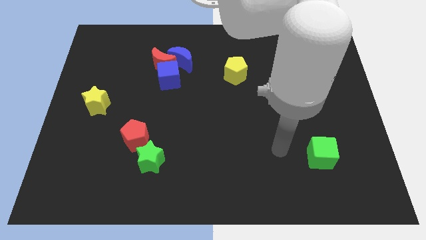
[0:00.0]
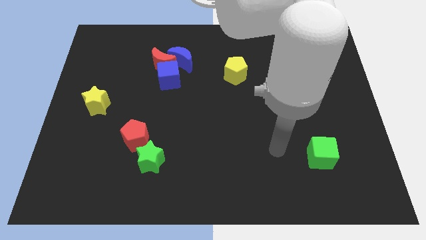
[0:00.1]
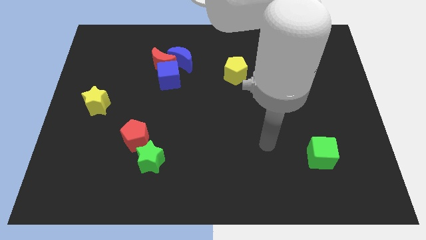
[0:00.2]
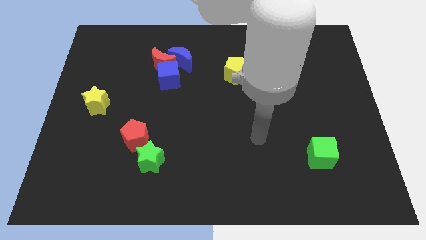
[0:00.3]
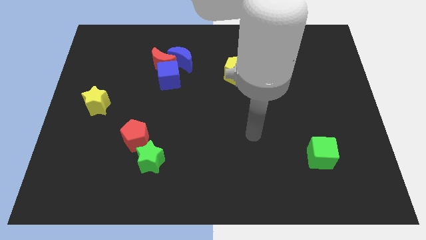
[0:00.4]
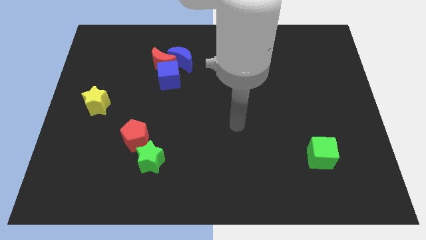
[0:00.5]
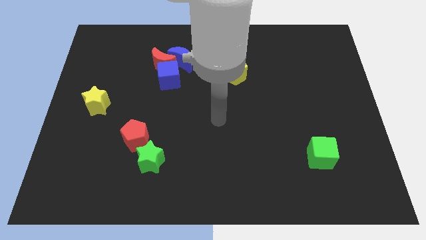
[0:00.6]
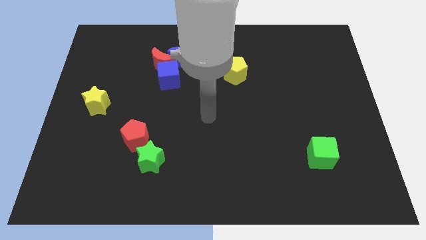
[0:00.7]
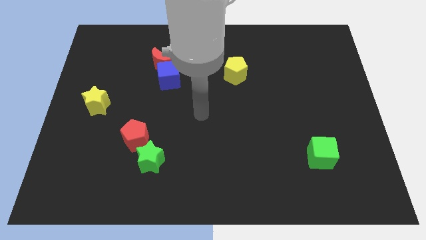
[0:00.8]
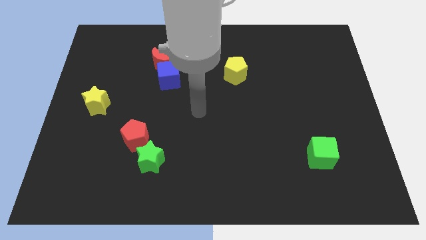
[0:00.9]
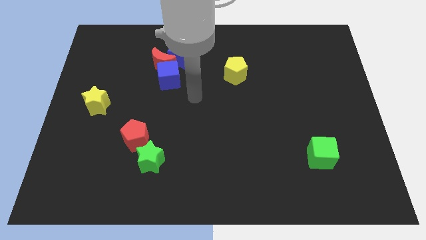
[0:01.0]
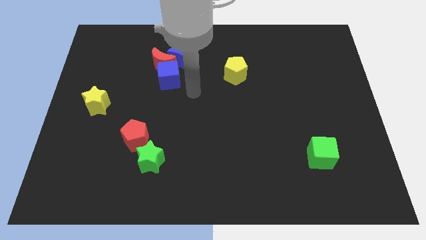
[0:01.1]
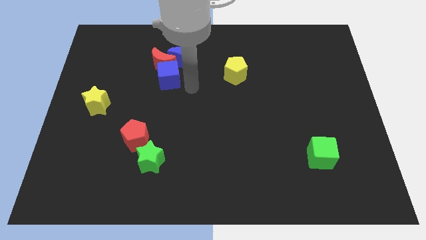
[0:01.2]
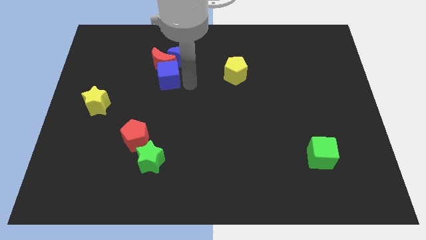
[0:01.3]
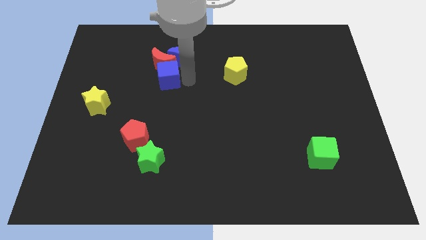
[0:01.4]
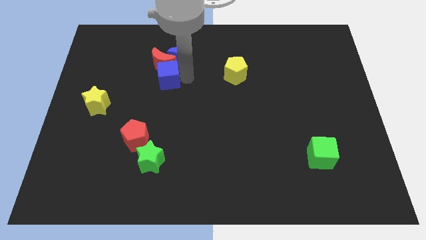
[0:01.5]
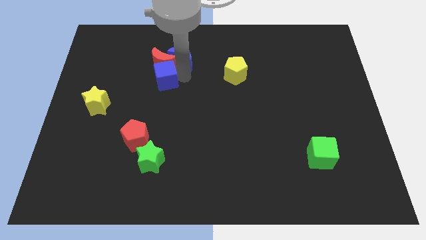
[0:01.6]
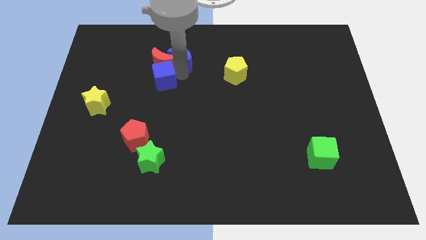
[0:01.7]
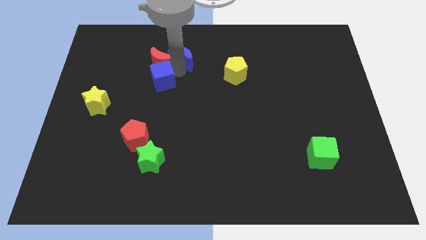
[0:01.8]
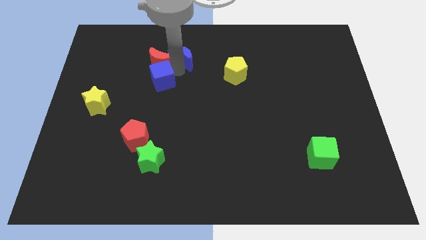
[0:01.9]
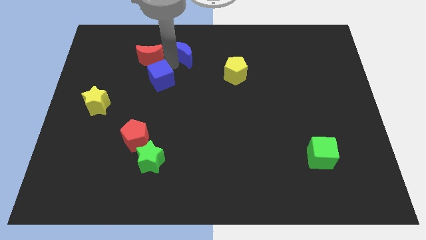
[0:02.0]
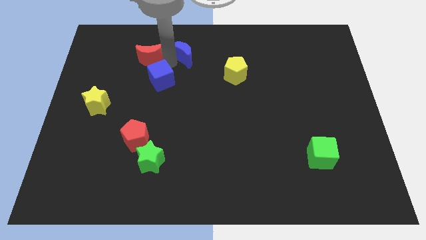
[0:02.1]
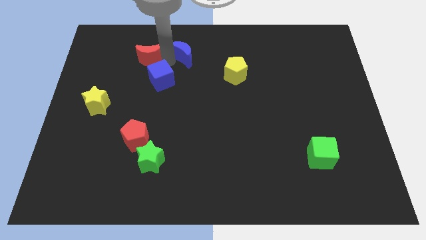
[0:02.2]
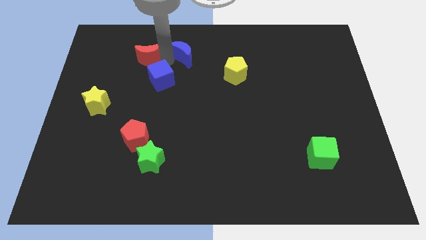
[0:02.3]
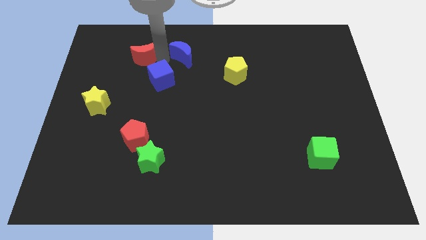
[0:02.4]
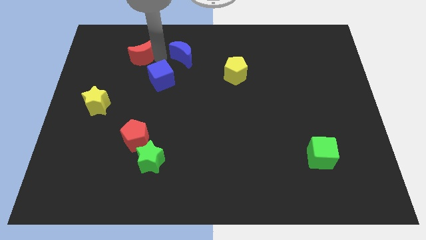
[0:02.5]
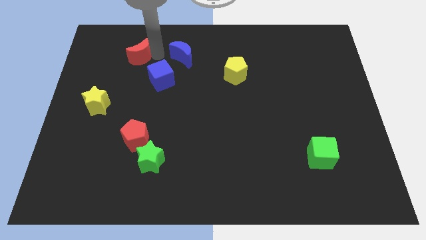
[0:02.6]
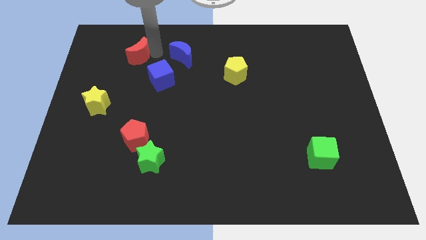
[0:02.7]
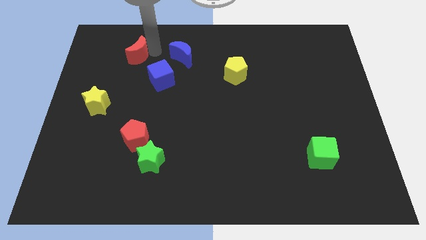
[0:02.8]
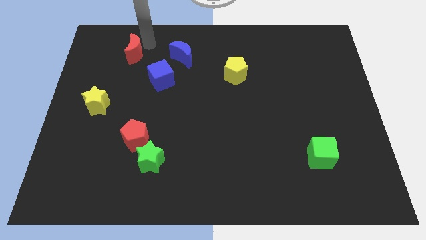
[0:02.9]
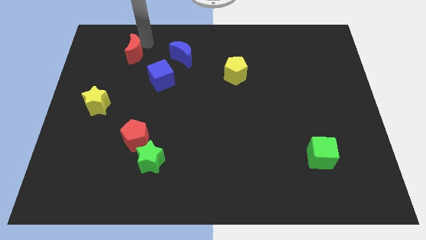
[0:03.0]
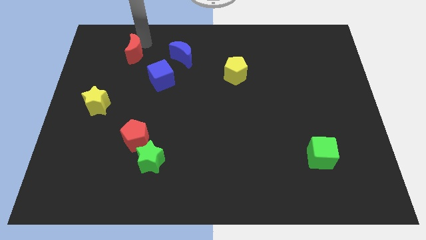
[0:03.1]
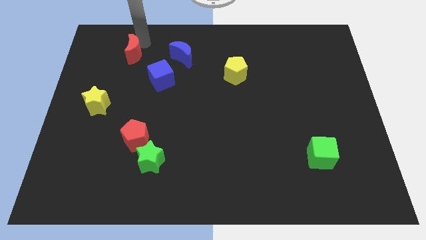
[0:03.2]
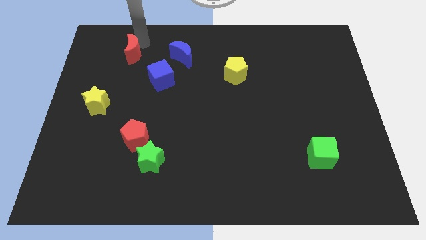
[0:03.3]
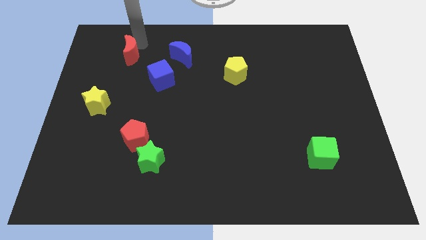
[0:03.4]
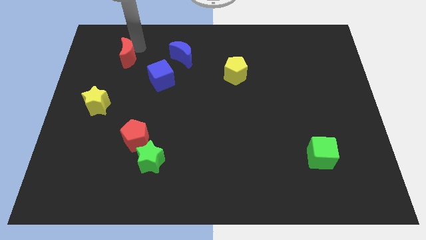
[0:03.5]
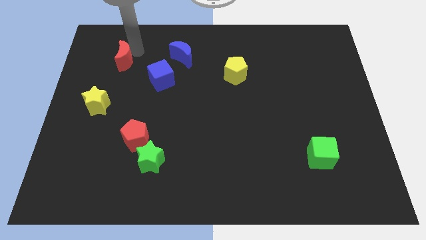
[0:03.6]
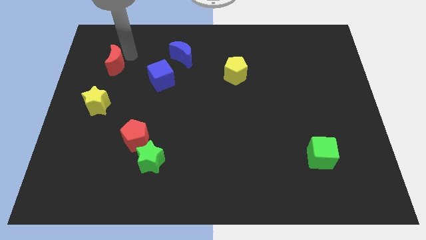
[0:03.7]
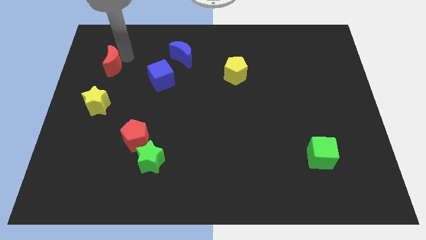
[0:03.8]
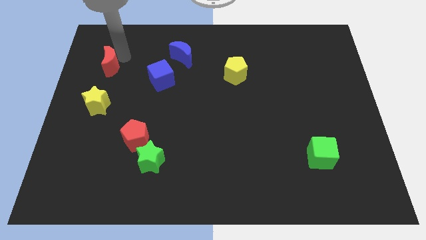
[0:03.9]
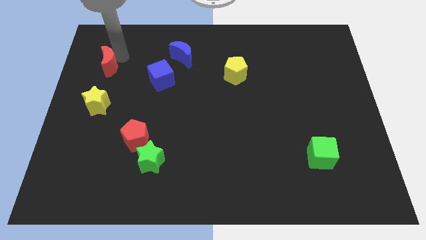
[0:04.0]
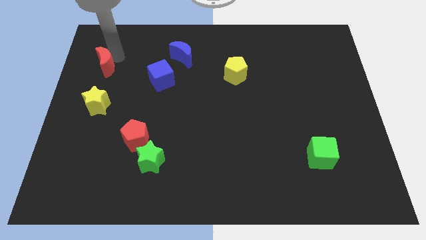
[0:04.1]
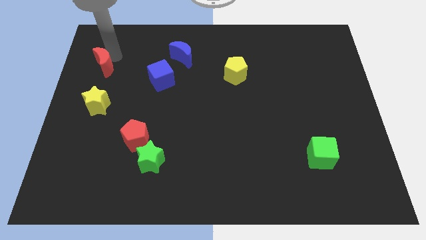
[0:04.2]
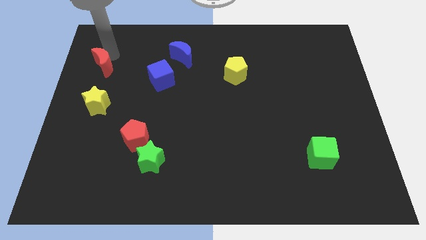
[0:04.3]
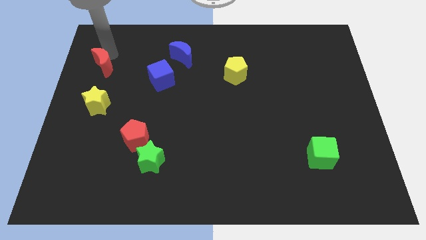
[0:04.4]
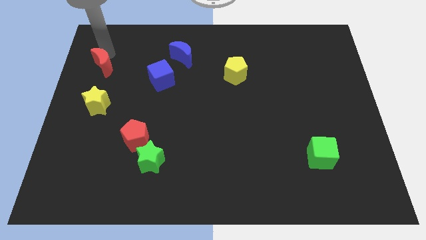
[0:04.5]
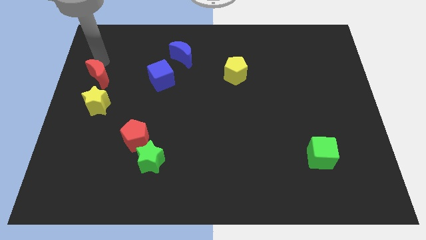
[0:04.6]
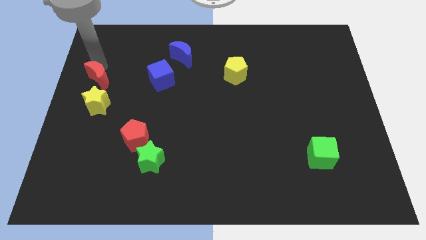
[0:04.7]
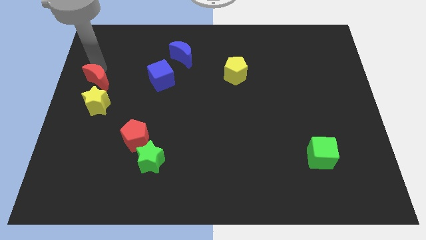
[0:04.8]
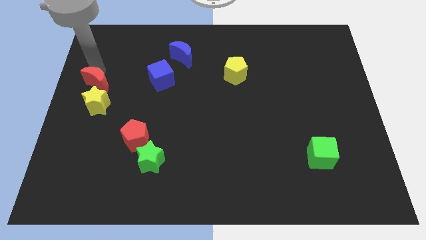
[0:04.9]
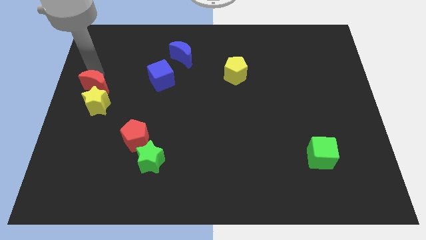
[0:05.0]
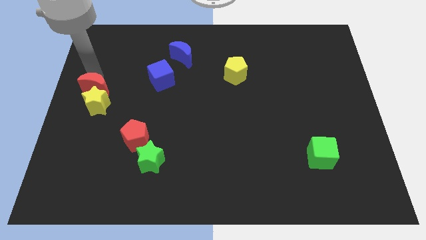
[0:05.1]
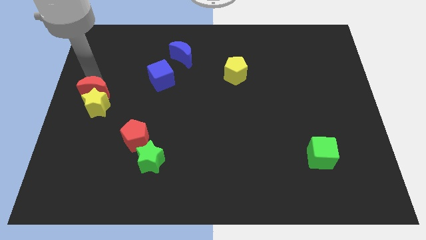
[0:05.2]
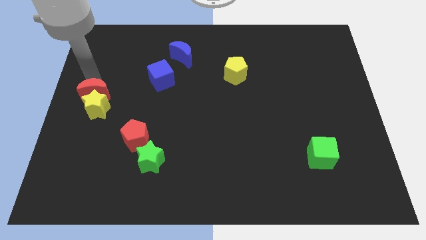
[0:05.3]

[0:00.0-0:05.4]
put the red moon close to the yellow star

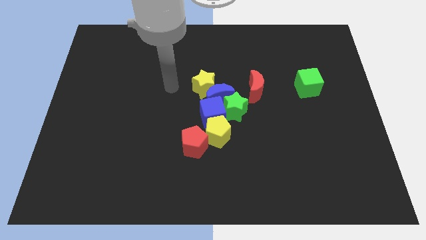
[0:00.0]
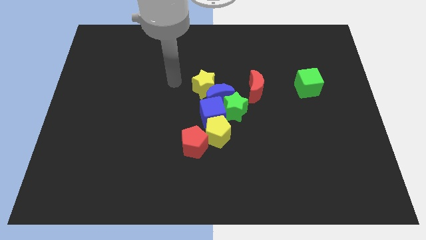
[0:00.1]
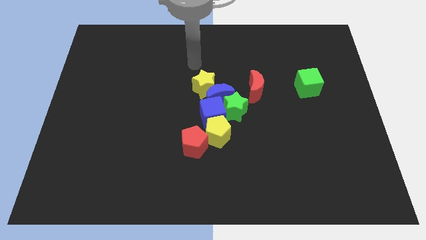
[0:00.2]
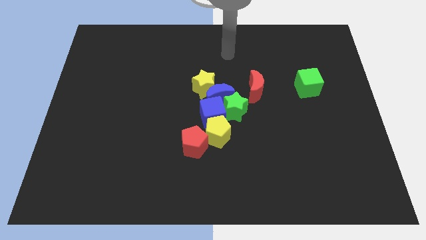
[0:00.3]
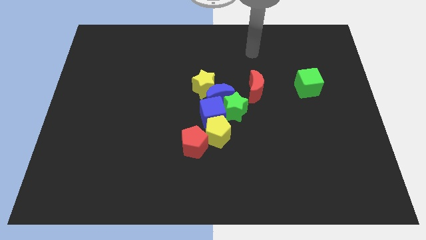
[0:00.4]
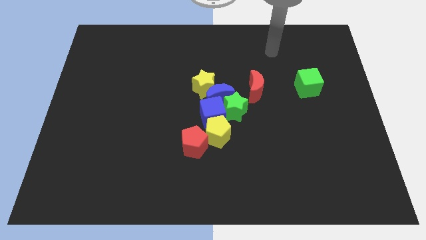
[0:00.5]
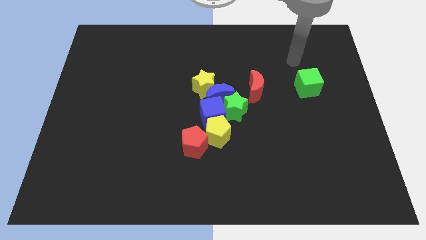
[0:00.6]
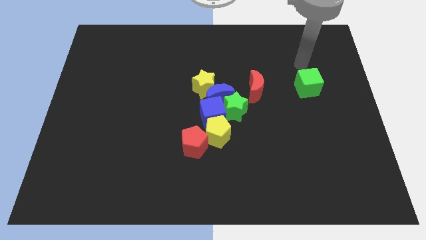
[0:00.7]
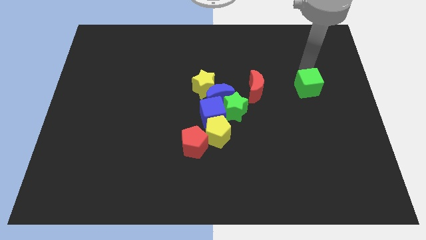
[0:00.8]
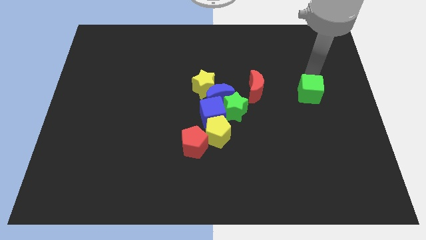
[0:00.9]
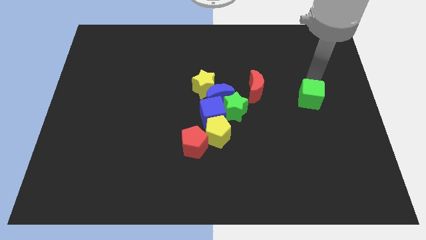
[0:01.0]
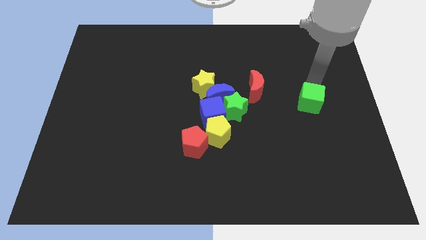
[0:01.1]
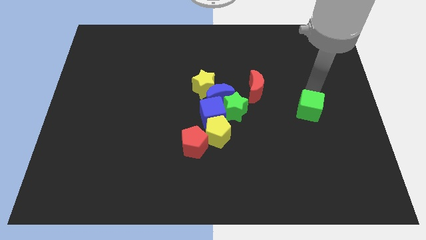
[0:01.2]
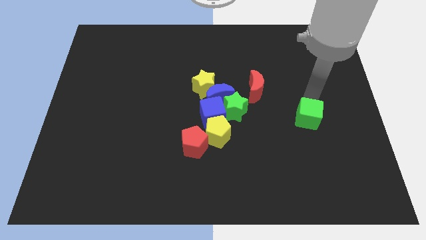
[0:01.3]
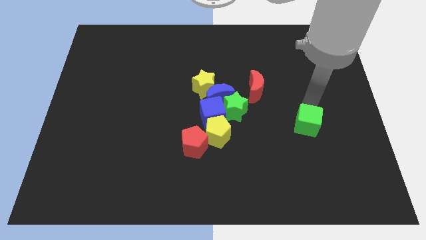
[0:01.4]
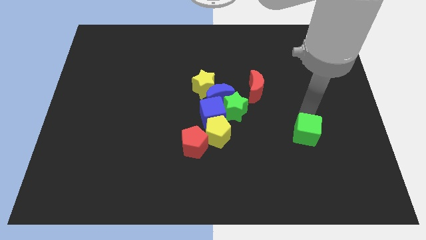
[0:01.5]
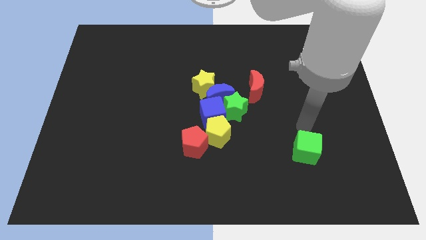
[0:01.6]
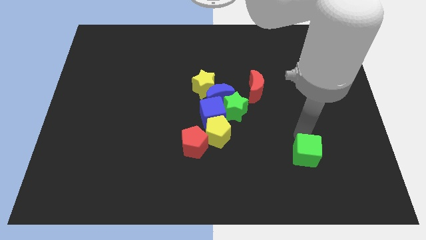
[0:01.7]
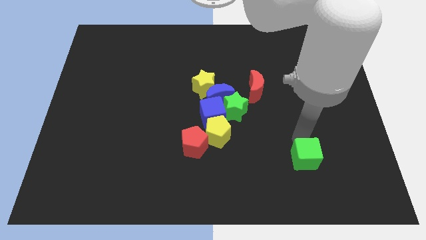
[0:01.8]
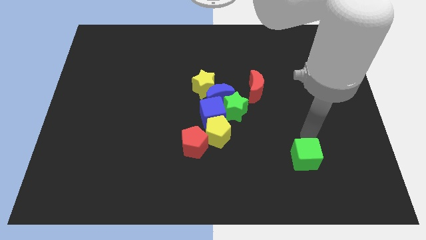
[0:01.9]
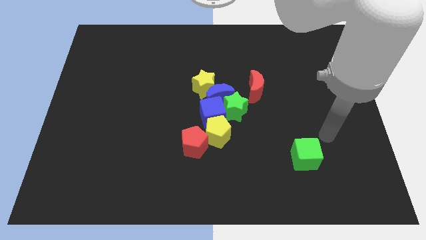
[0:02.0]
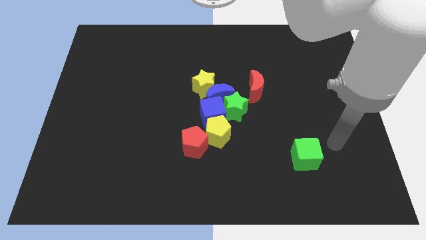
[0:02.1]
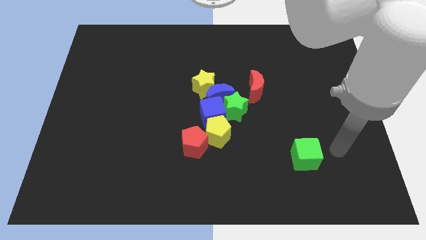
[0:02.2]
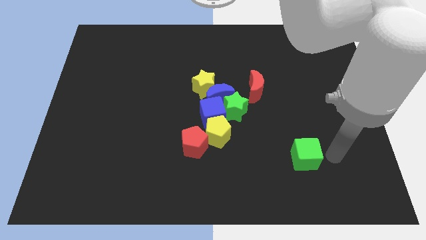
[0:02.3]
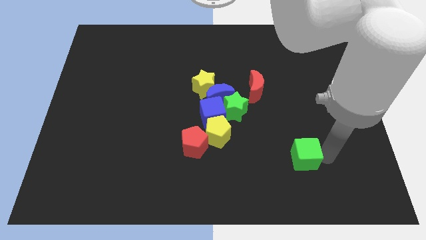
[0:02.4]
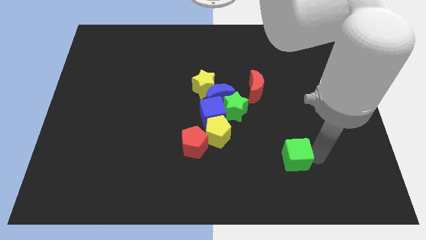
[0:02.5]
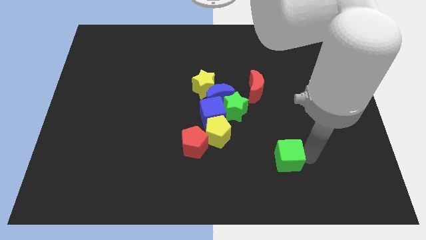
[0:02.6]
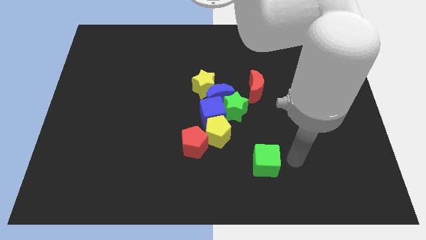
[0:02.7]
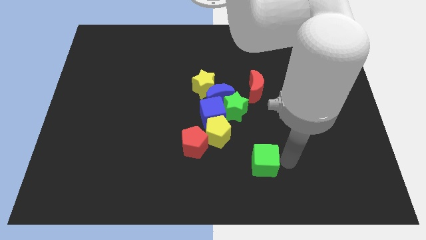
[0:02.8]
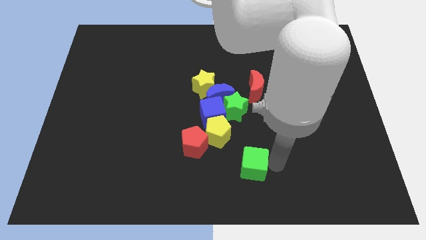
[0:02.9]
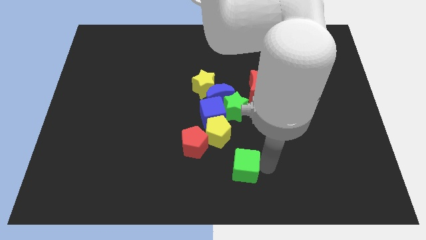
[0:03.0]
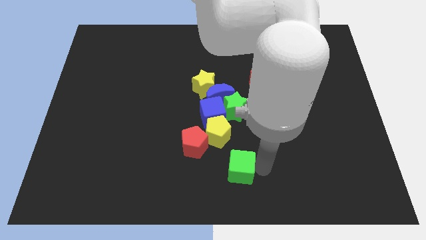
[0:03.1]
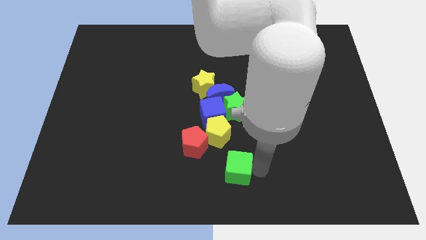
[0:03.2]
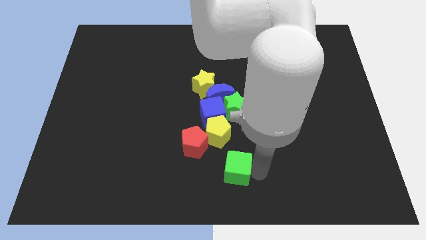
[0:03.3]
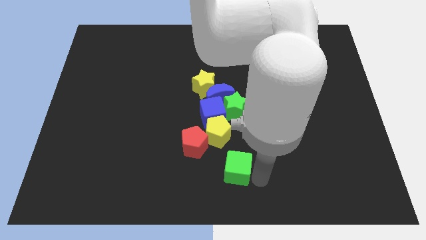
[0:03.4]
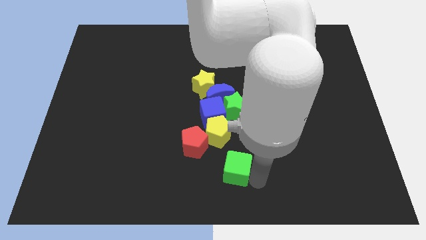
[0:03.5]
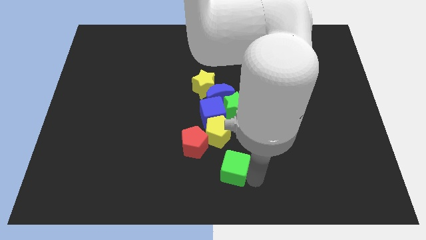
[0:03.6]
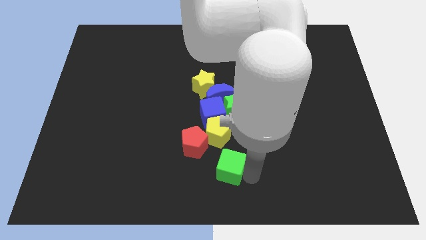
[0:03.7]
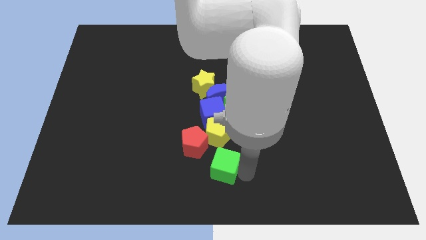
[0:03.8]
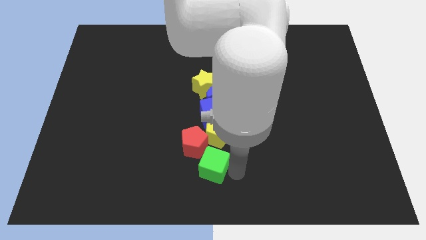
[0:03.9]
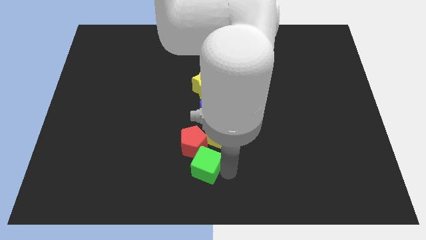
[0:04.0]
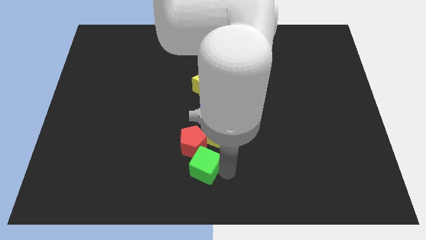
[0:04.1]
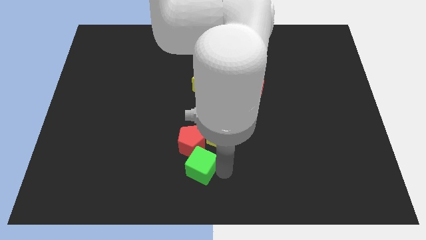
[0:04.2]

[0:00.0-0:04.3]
push the green cube close to the red pentagon
